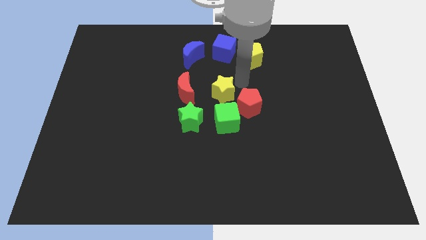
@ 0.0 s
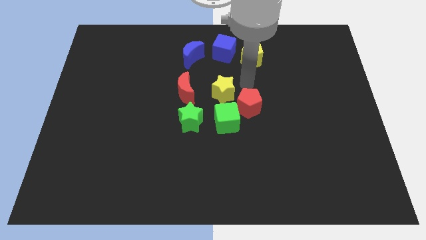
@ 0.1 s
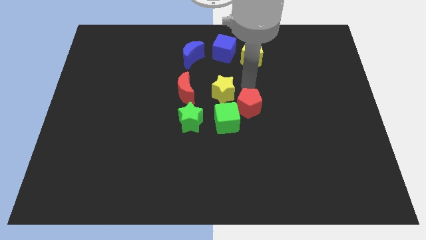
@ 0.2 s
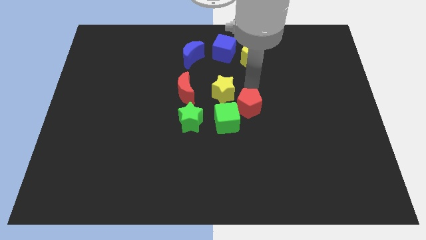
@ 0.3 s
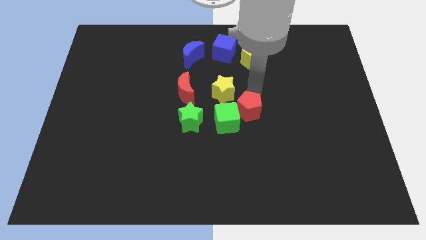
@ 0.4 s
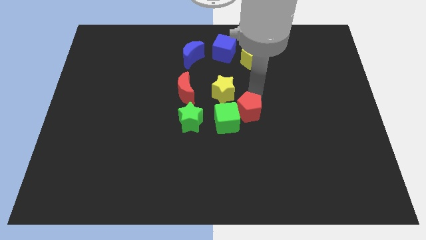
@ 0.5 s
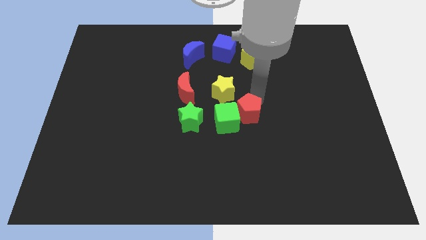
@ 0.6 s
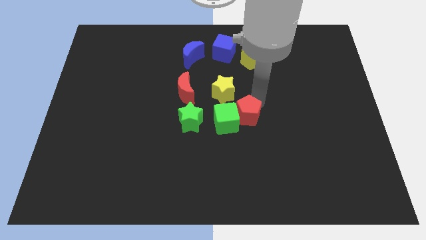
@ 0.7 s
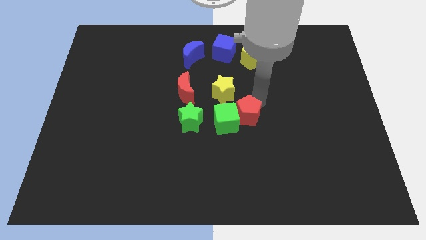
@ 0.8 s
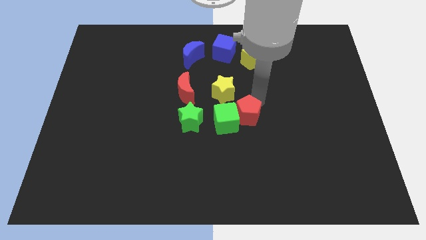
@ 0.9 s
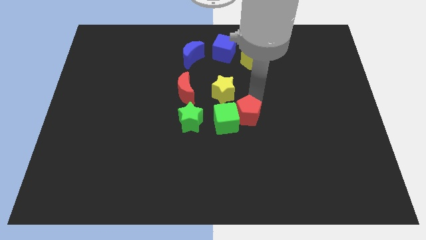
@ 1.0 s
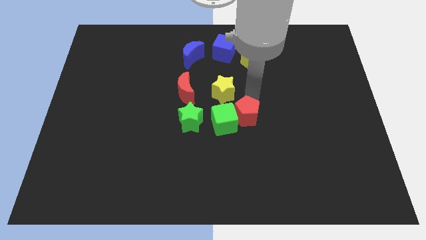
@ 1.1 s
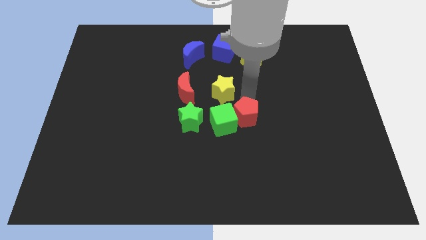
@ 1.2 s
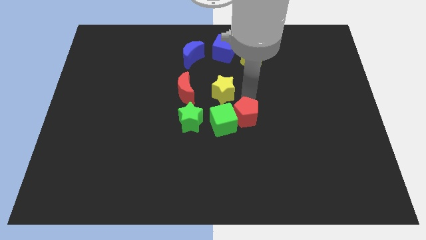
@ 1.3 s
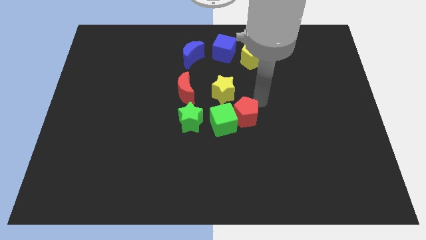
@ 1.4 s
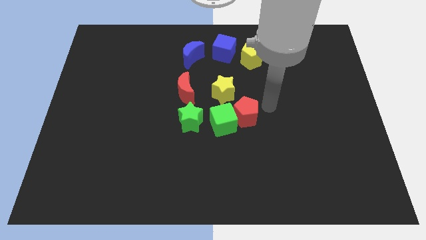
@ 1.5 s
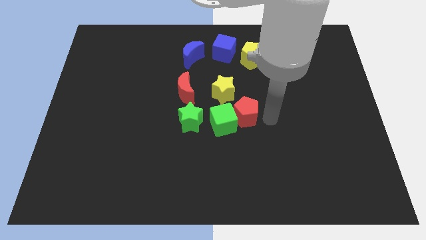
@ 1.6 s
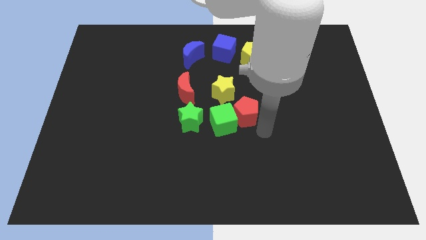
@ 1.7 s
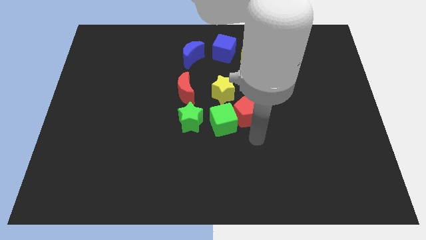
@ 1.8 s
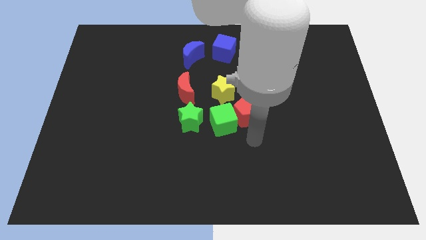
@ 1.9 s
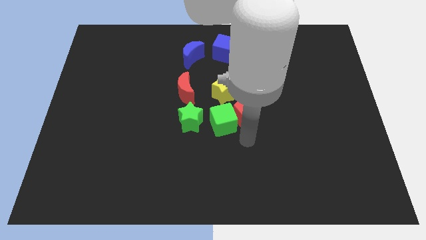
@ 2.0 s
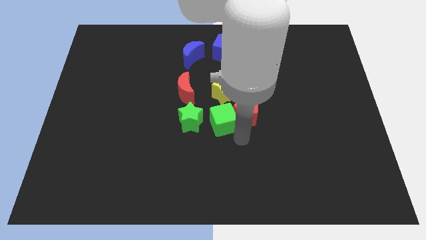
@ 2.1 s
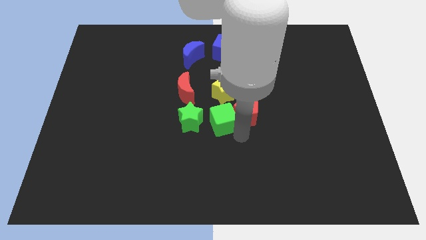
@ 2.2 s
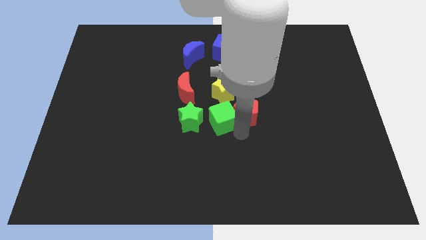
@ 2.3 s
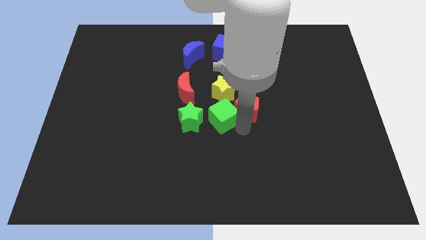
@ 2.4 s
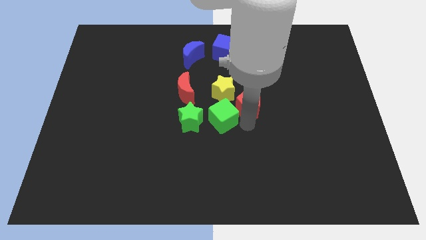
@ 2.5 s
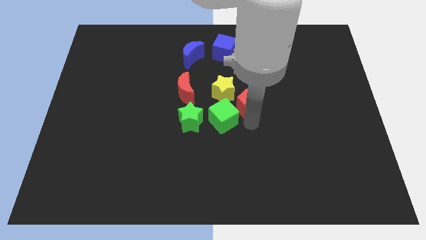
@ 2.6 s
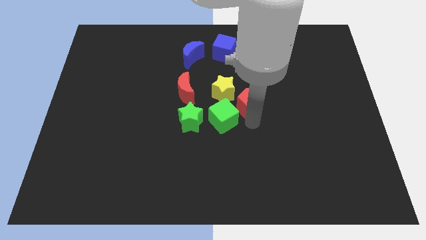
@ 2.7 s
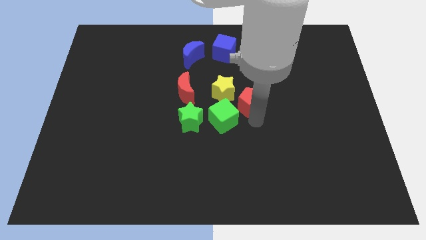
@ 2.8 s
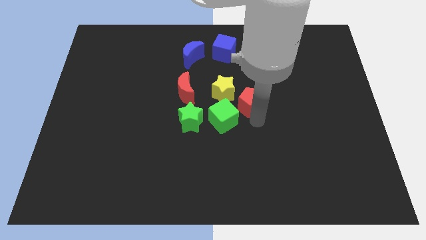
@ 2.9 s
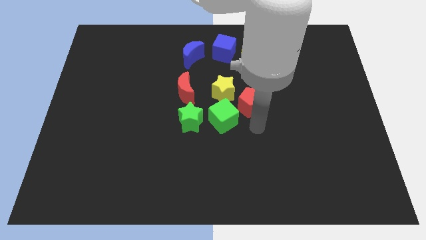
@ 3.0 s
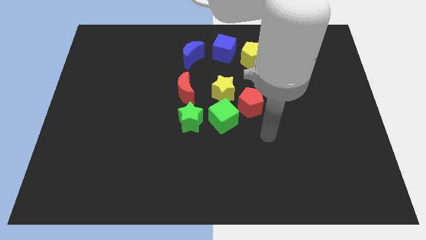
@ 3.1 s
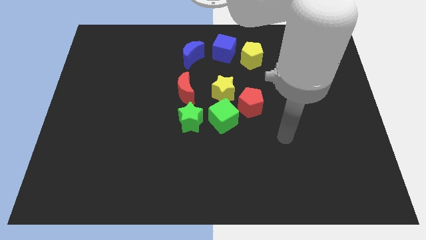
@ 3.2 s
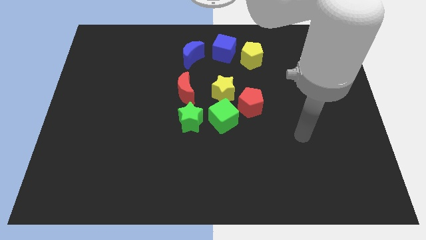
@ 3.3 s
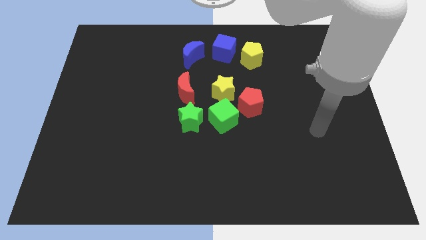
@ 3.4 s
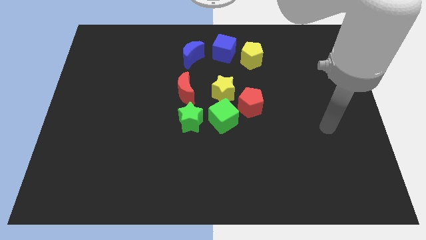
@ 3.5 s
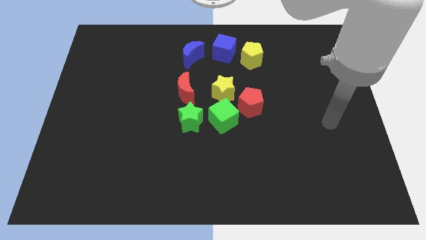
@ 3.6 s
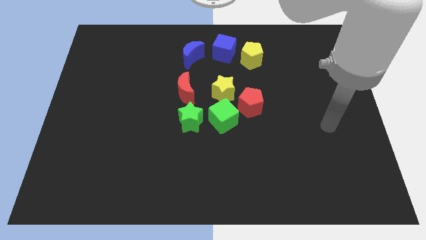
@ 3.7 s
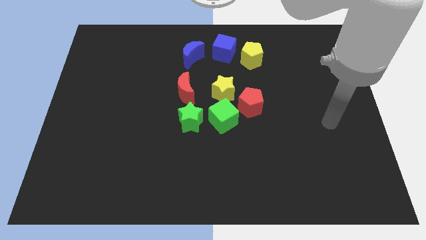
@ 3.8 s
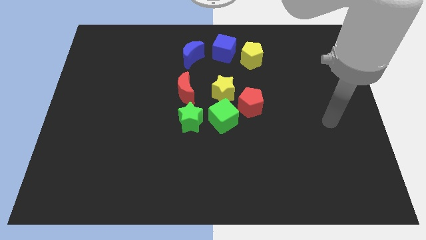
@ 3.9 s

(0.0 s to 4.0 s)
adjust the green cube and the red pentagon at the center of the board

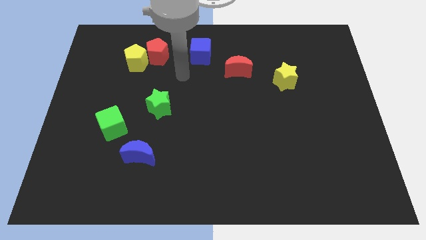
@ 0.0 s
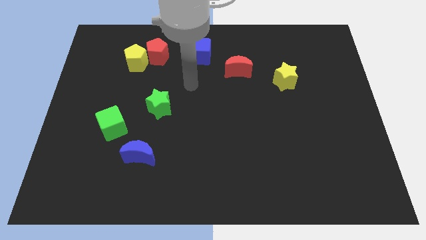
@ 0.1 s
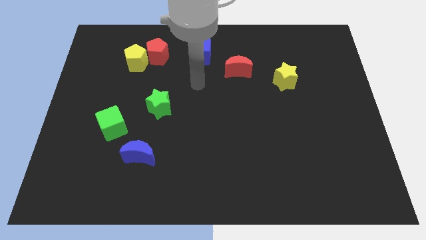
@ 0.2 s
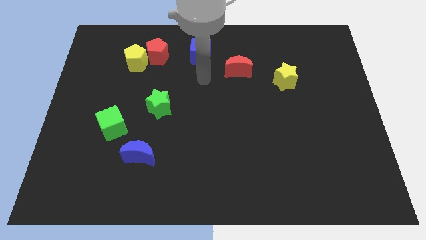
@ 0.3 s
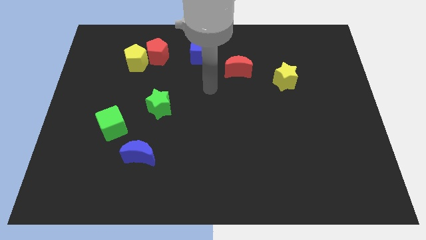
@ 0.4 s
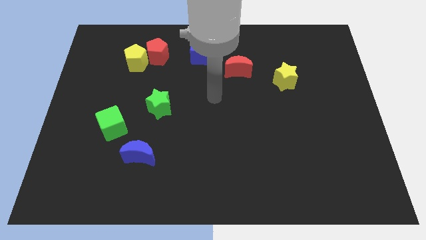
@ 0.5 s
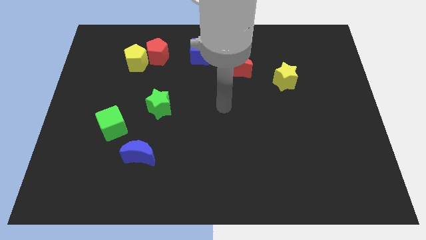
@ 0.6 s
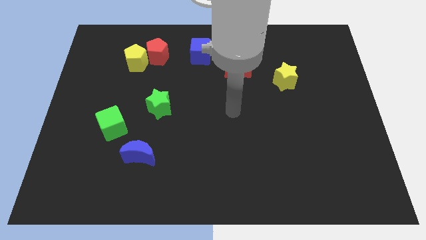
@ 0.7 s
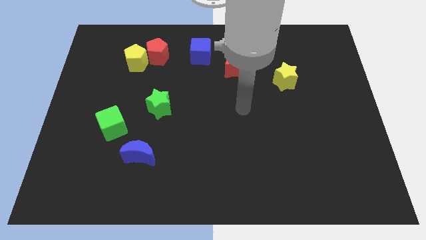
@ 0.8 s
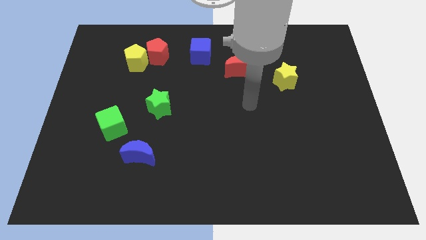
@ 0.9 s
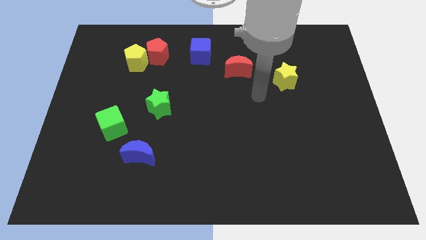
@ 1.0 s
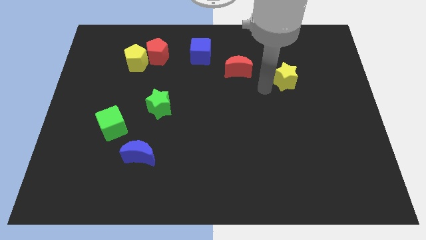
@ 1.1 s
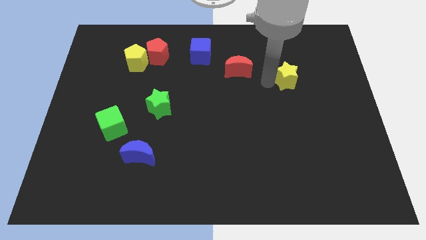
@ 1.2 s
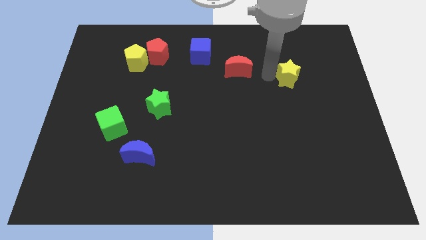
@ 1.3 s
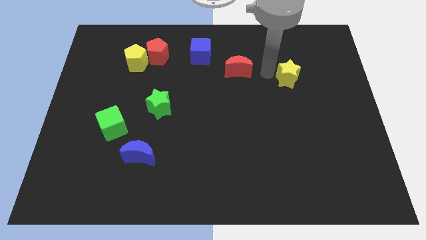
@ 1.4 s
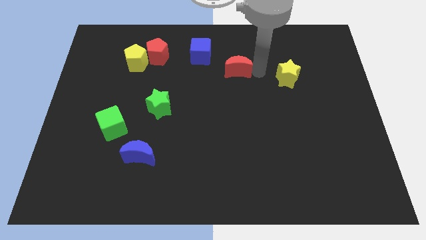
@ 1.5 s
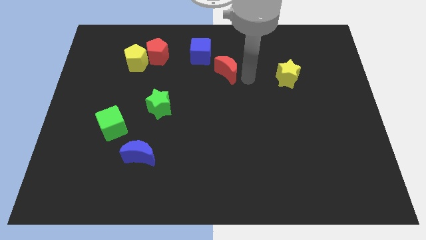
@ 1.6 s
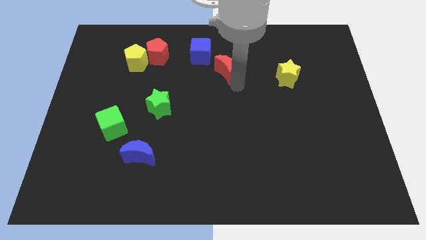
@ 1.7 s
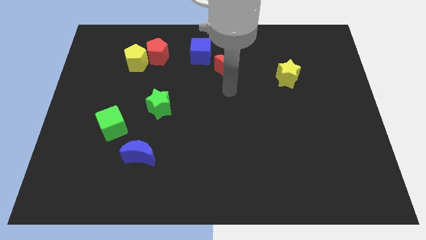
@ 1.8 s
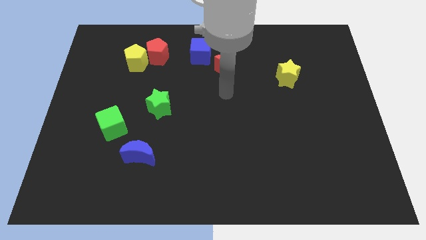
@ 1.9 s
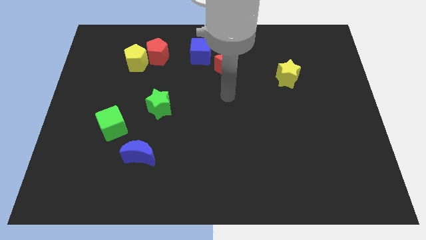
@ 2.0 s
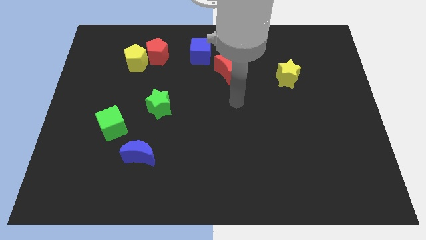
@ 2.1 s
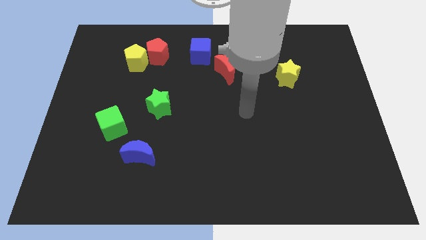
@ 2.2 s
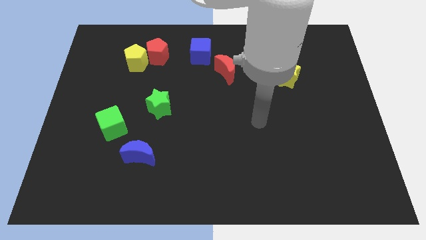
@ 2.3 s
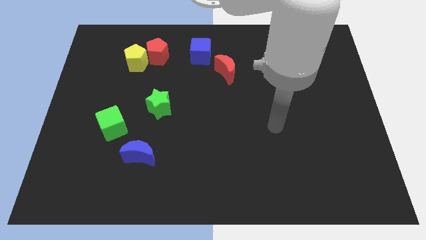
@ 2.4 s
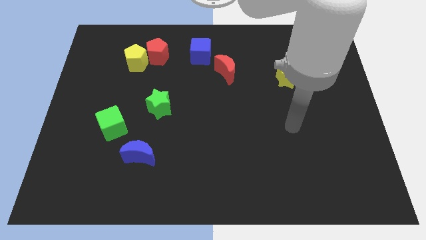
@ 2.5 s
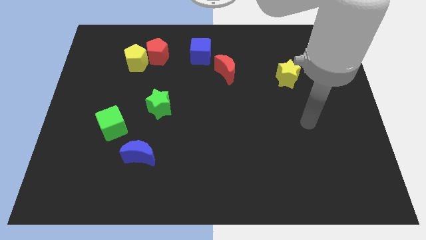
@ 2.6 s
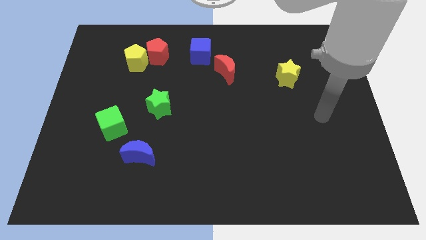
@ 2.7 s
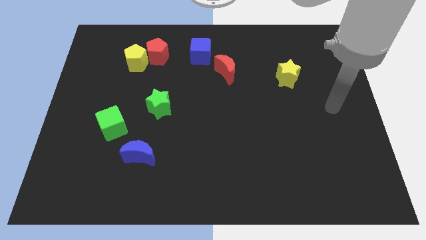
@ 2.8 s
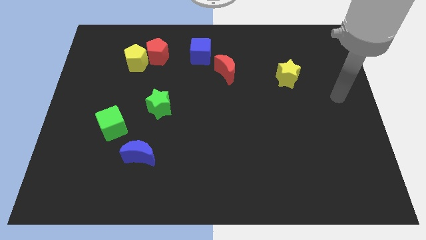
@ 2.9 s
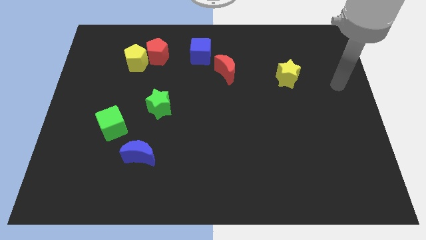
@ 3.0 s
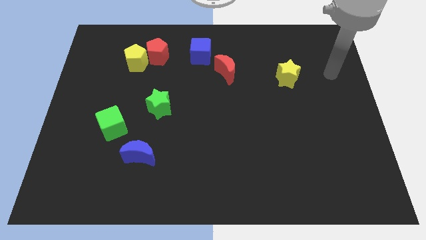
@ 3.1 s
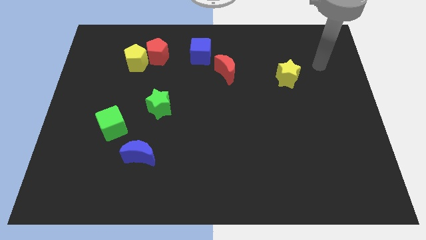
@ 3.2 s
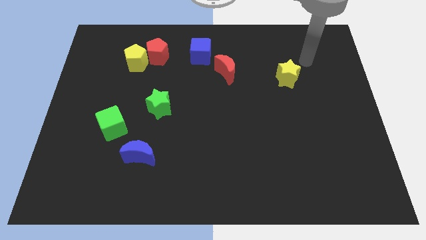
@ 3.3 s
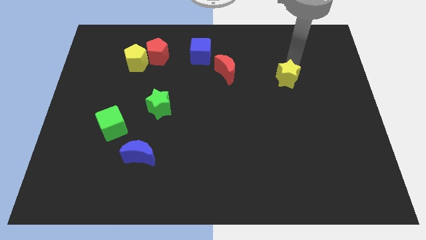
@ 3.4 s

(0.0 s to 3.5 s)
move your arm to the top of the yellow star

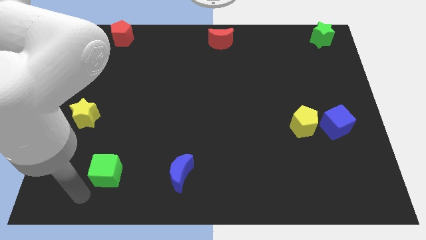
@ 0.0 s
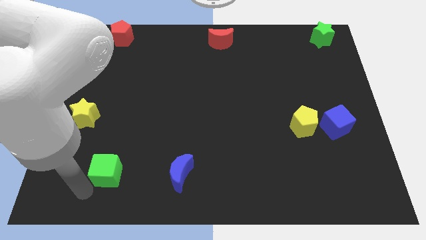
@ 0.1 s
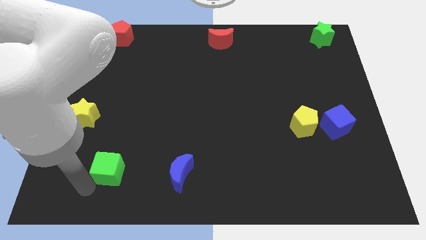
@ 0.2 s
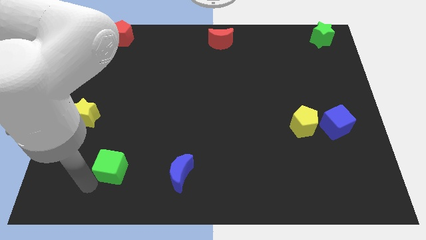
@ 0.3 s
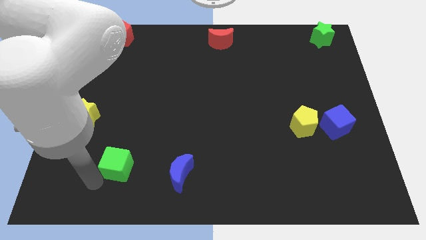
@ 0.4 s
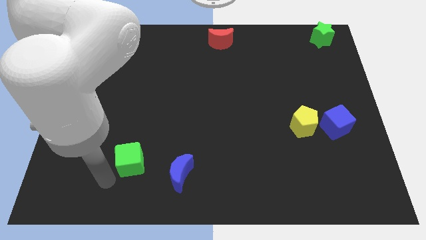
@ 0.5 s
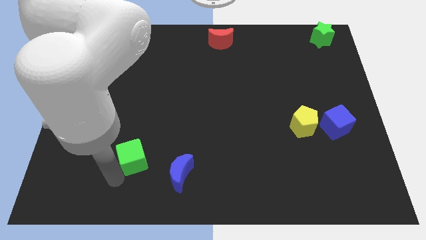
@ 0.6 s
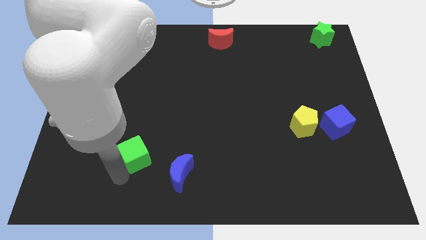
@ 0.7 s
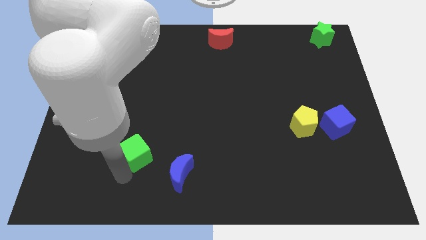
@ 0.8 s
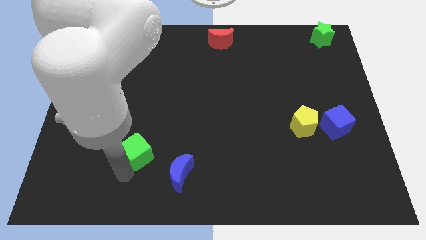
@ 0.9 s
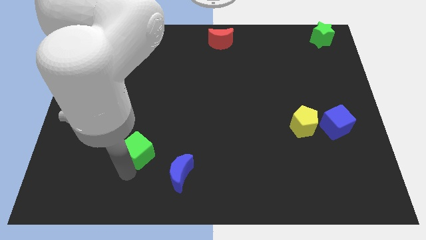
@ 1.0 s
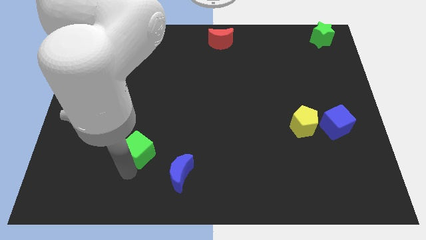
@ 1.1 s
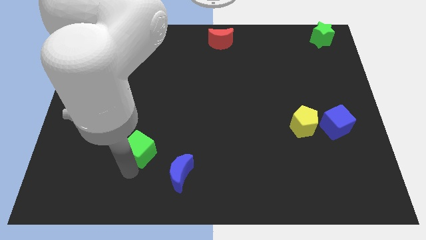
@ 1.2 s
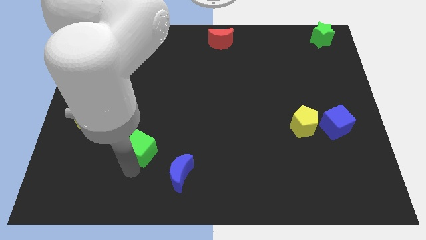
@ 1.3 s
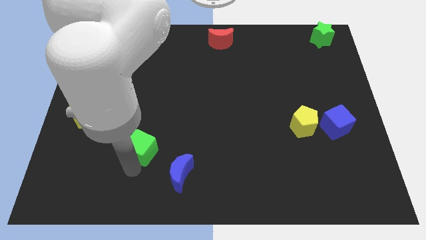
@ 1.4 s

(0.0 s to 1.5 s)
drag the green cube slightly upwards
